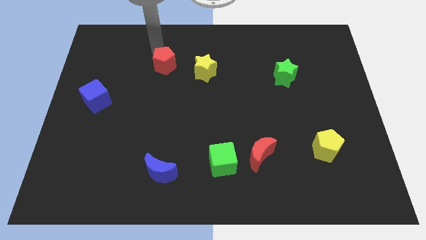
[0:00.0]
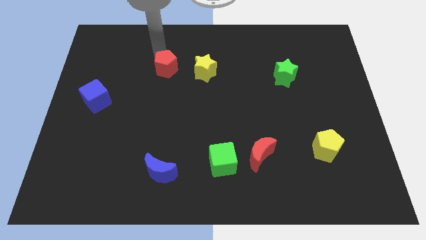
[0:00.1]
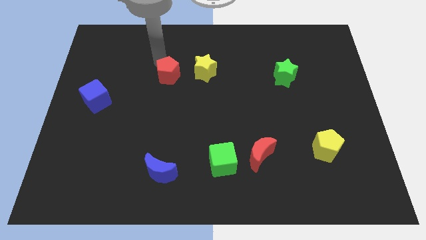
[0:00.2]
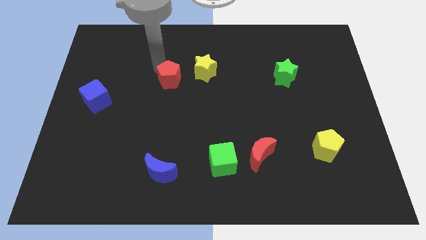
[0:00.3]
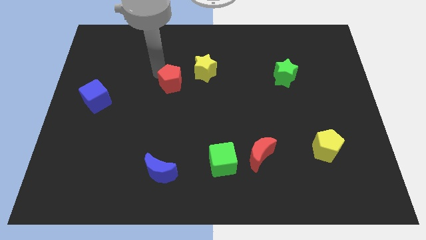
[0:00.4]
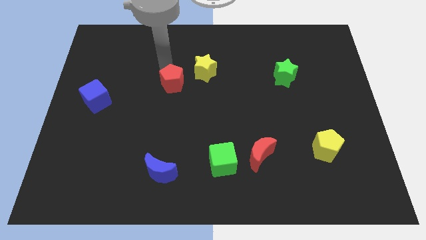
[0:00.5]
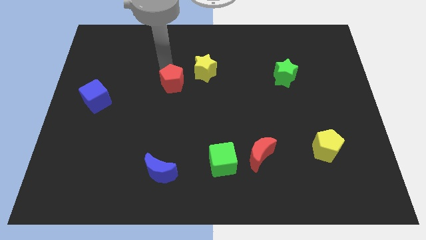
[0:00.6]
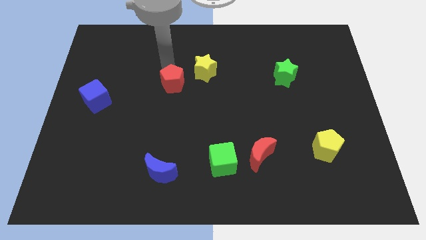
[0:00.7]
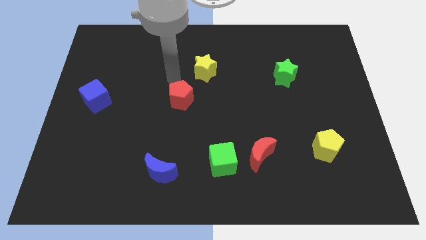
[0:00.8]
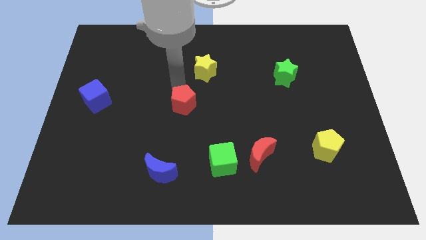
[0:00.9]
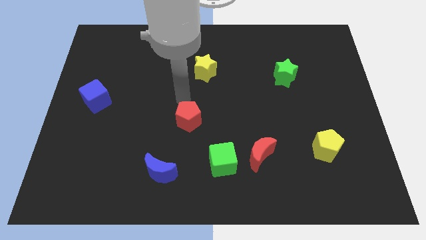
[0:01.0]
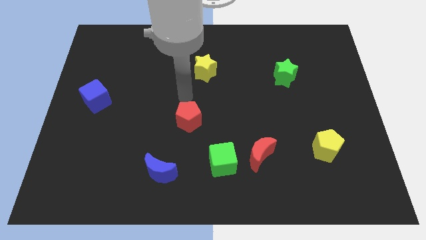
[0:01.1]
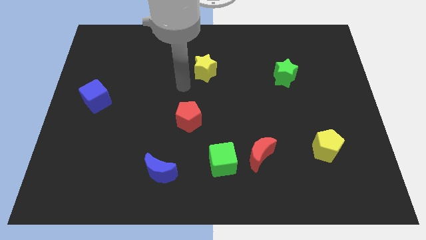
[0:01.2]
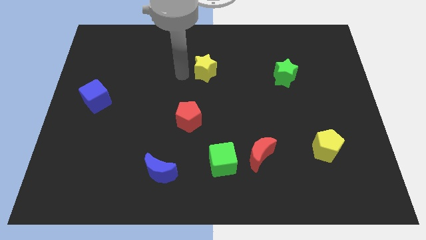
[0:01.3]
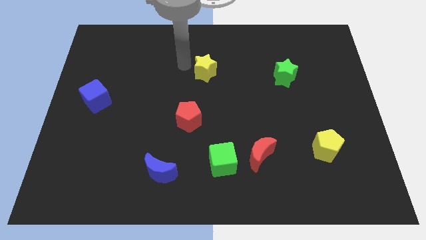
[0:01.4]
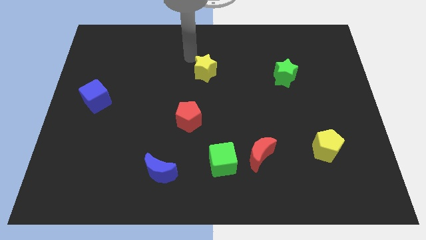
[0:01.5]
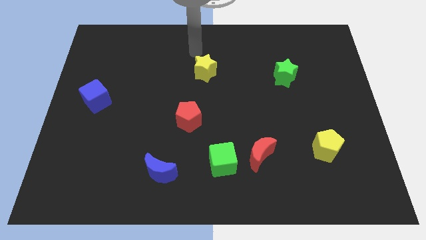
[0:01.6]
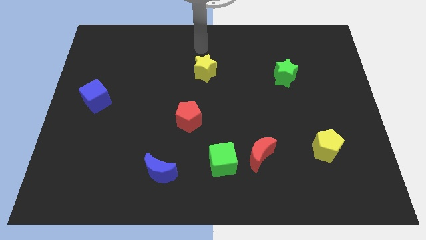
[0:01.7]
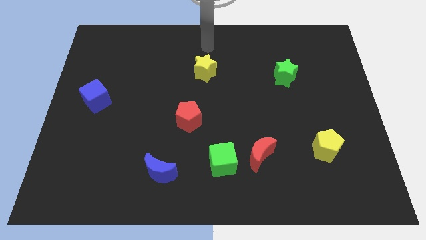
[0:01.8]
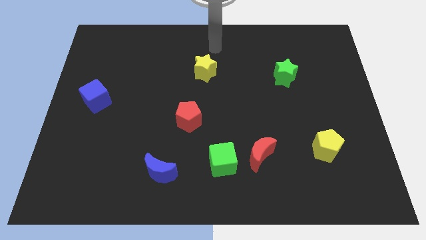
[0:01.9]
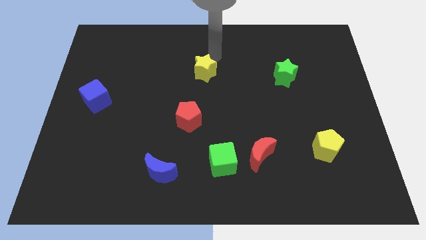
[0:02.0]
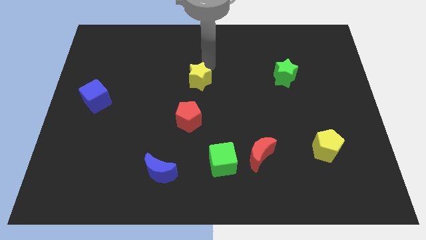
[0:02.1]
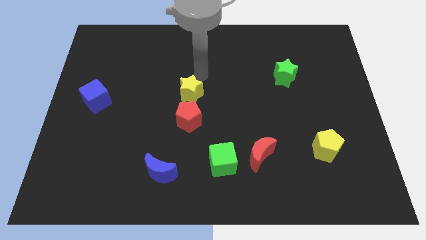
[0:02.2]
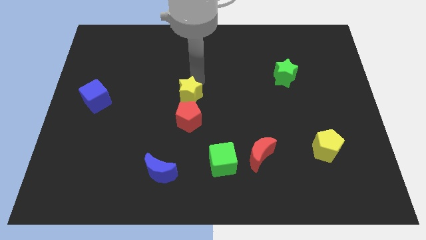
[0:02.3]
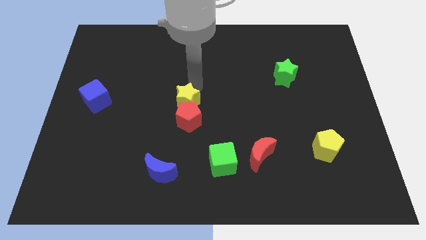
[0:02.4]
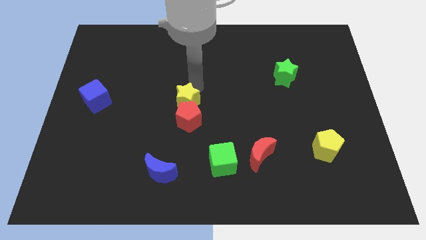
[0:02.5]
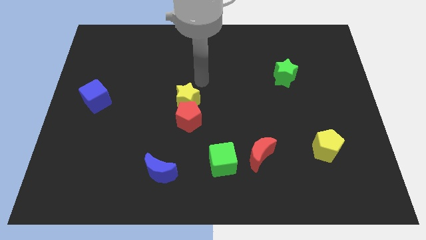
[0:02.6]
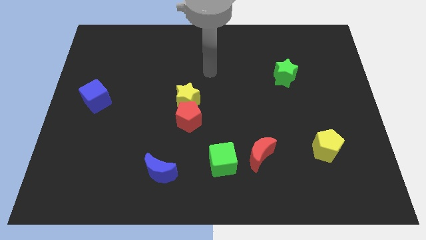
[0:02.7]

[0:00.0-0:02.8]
place the yellow star above the red pentagon

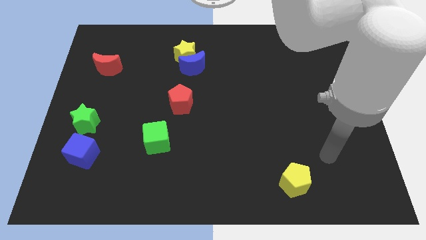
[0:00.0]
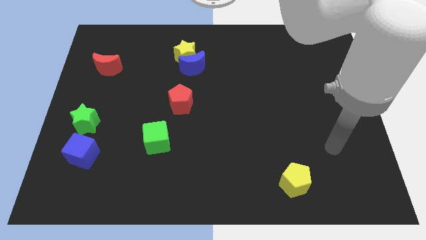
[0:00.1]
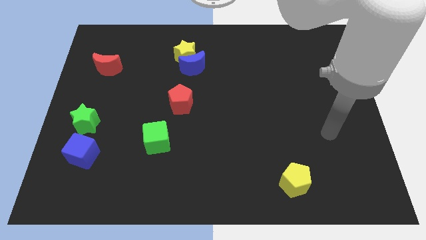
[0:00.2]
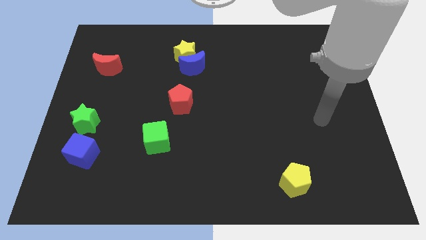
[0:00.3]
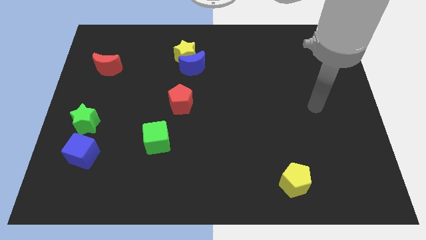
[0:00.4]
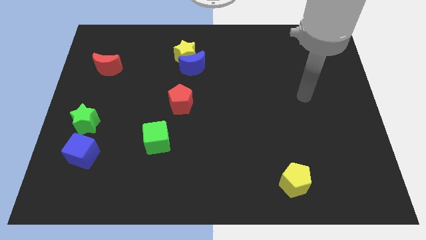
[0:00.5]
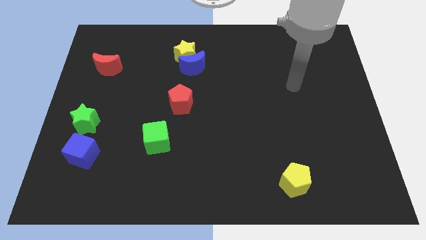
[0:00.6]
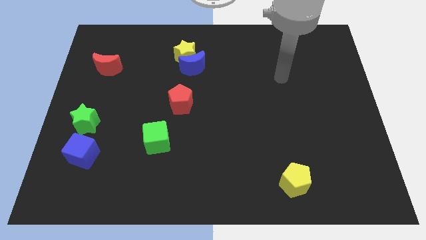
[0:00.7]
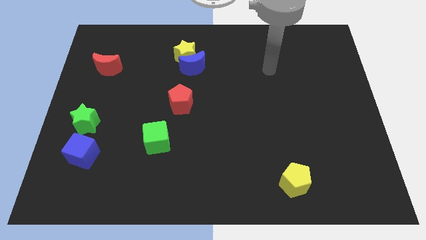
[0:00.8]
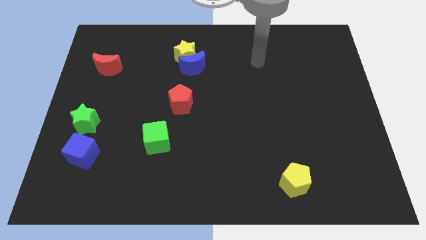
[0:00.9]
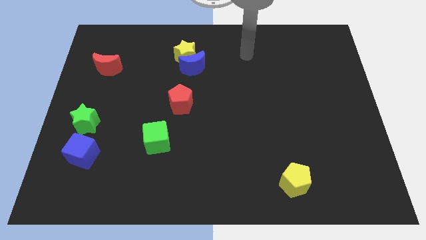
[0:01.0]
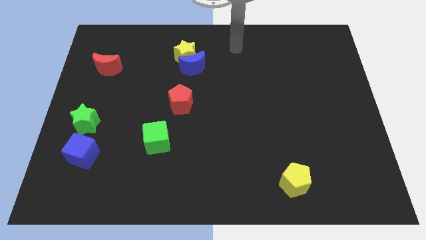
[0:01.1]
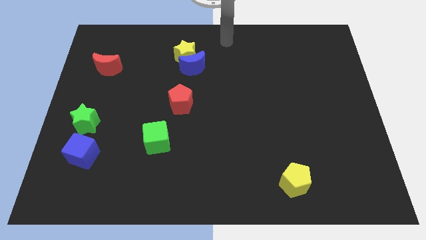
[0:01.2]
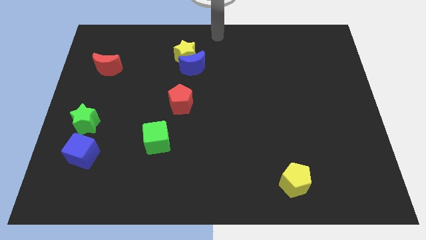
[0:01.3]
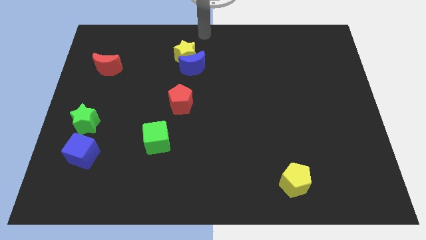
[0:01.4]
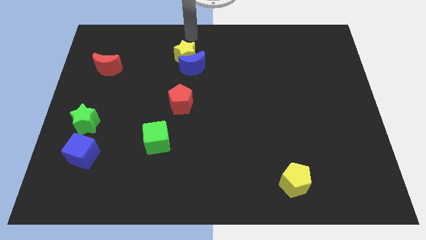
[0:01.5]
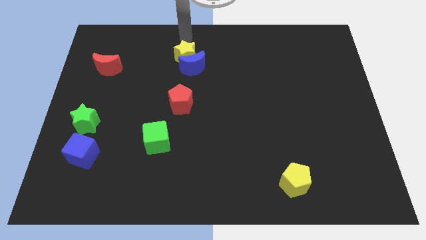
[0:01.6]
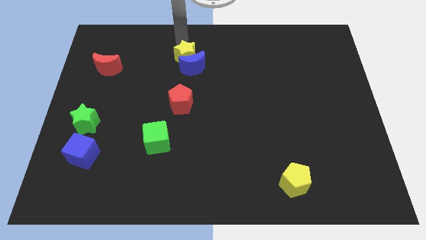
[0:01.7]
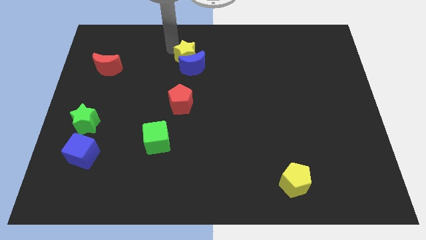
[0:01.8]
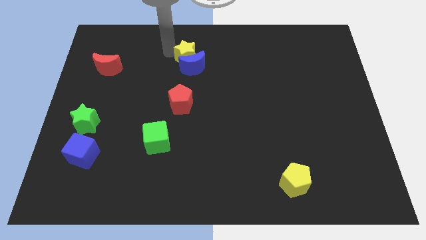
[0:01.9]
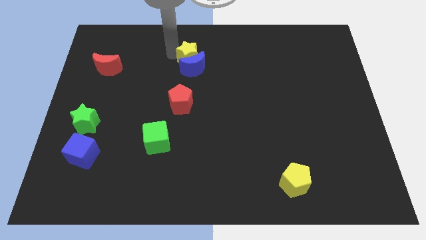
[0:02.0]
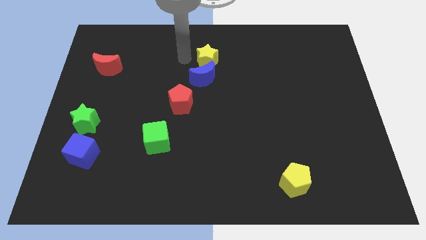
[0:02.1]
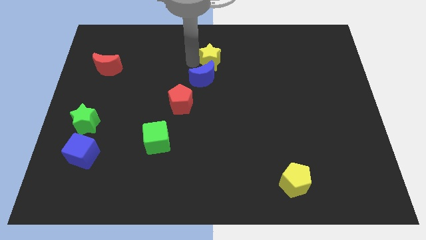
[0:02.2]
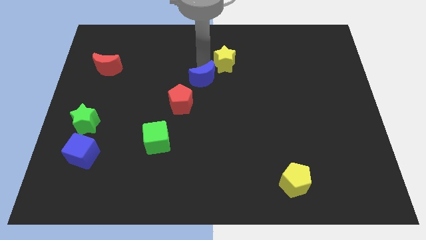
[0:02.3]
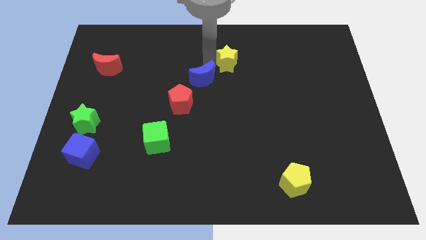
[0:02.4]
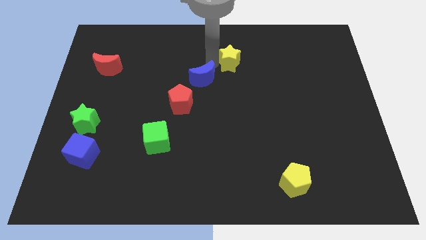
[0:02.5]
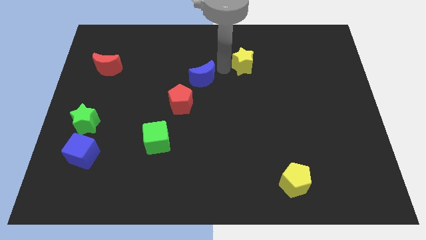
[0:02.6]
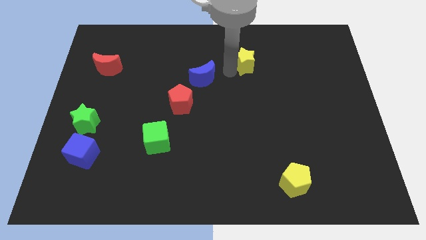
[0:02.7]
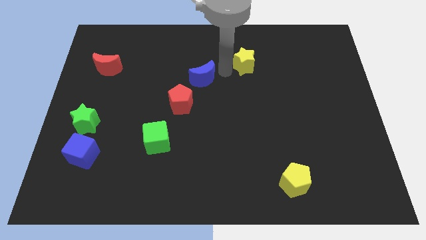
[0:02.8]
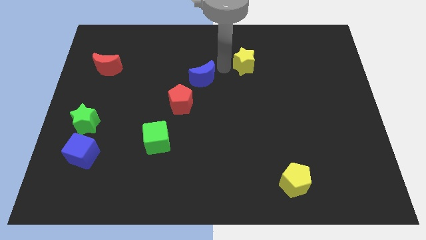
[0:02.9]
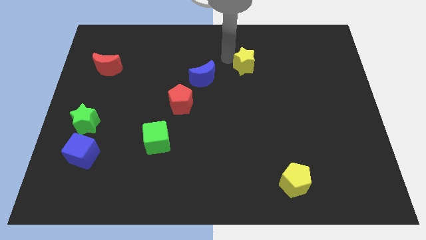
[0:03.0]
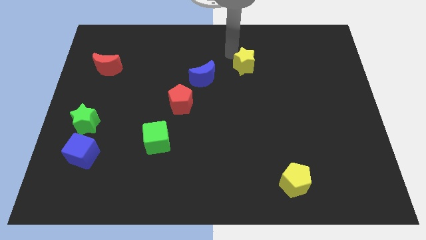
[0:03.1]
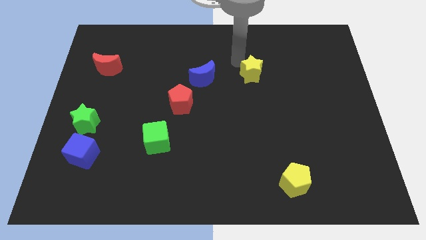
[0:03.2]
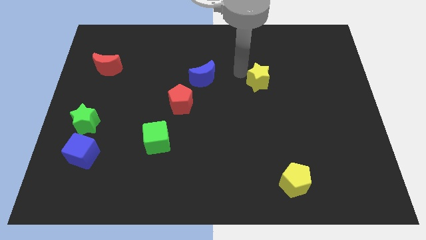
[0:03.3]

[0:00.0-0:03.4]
move the yellow star parallel right to the blue crescent

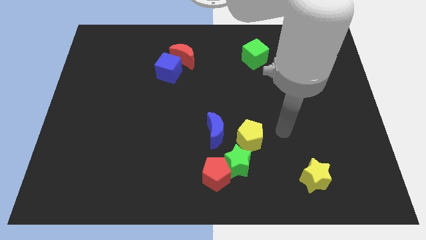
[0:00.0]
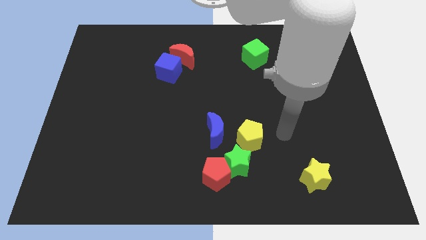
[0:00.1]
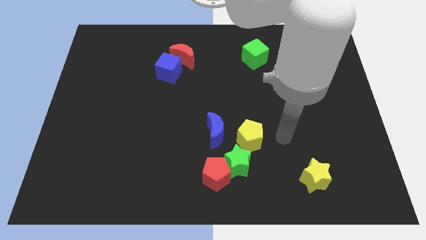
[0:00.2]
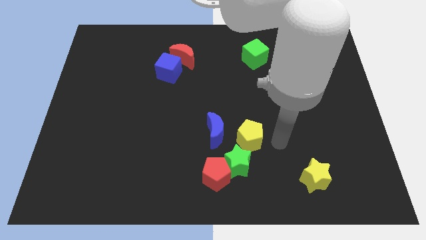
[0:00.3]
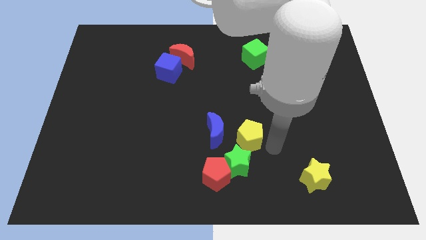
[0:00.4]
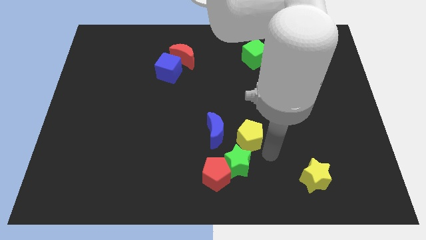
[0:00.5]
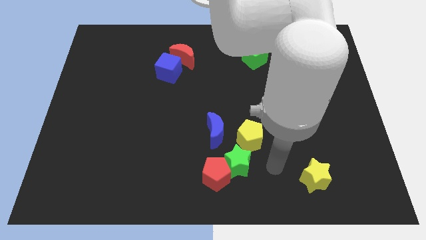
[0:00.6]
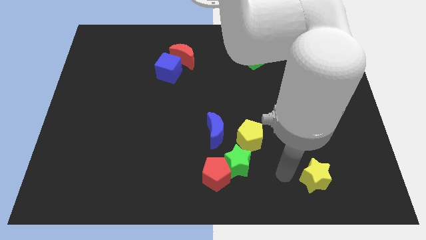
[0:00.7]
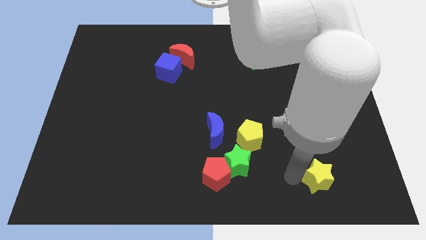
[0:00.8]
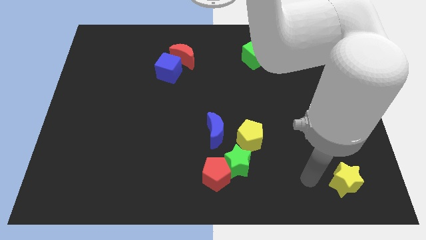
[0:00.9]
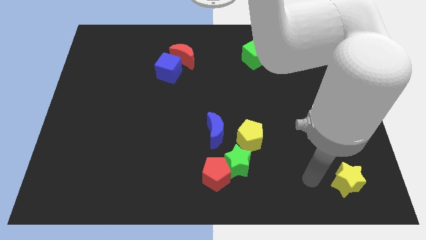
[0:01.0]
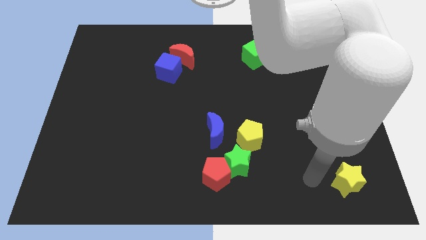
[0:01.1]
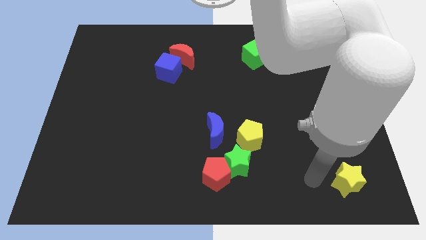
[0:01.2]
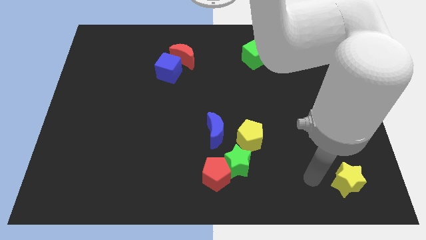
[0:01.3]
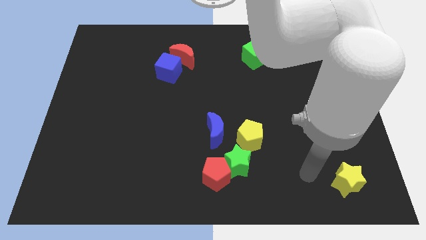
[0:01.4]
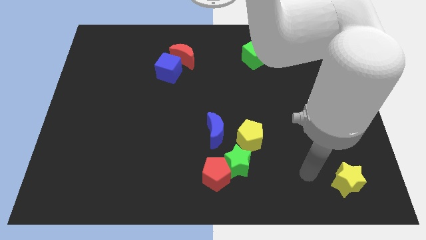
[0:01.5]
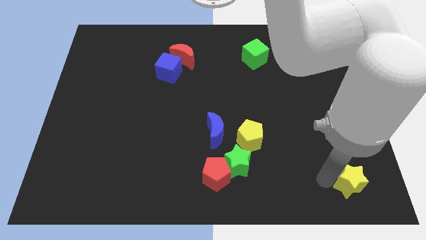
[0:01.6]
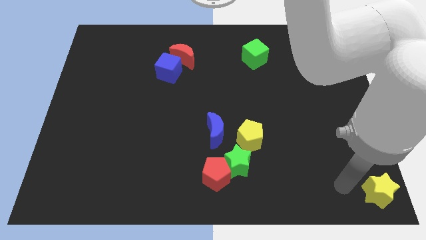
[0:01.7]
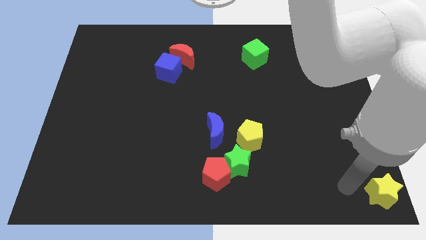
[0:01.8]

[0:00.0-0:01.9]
place the yellow star to the bottom right corner

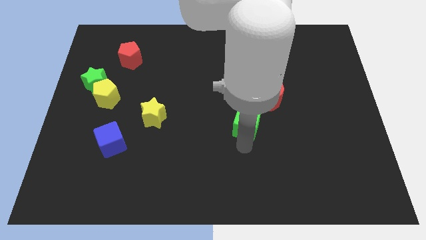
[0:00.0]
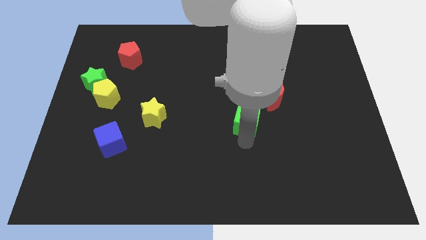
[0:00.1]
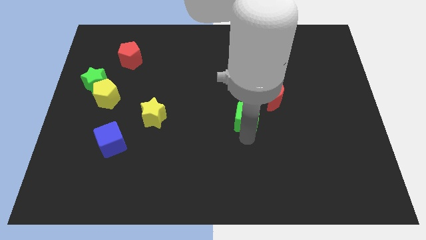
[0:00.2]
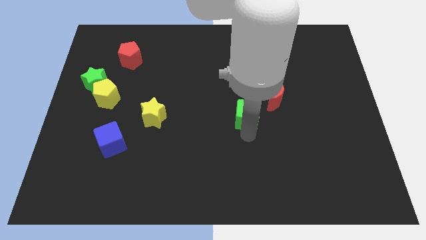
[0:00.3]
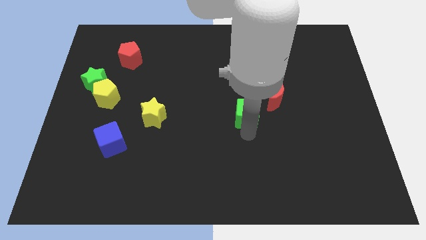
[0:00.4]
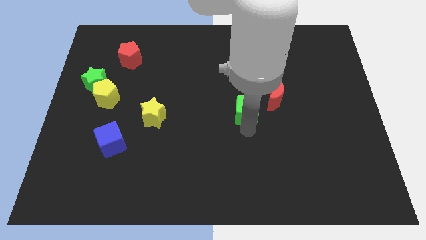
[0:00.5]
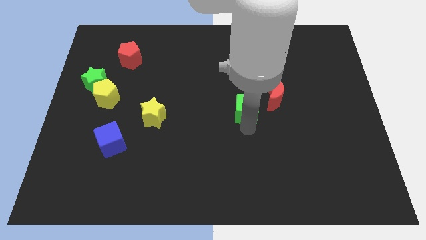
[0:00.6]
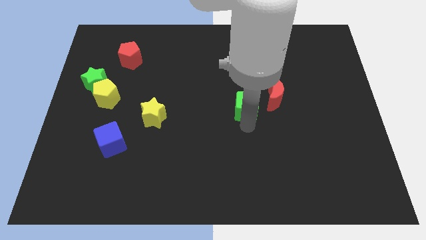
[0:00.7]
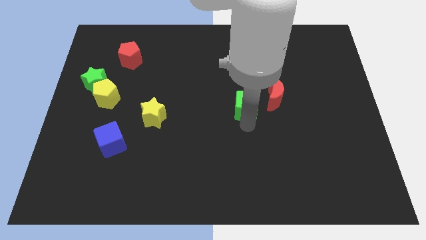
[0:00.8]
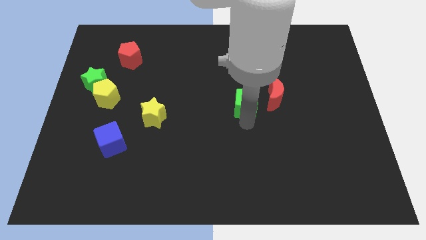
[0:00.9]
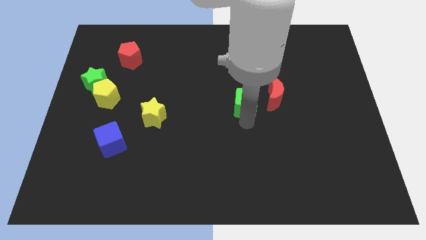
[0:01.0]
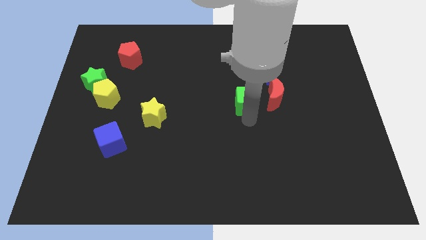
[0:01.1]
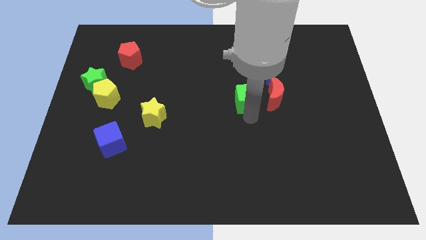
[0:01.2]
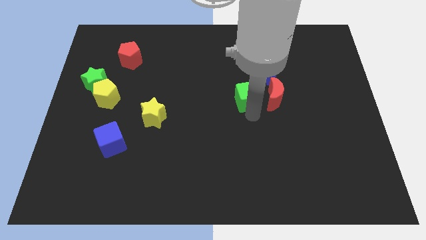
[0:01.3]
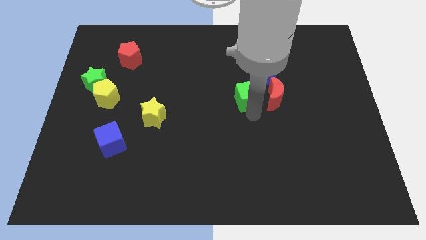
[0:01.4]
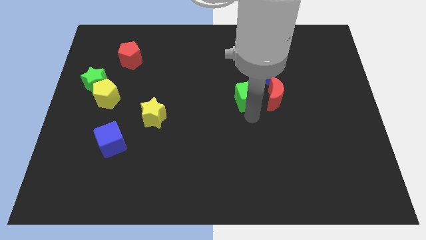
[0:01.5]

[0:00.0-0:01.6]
put the green cube to the left of the red crescent
